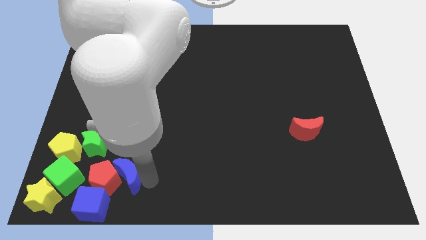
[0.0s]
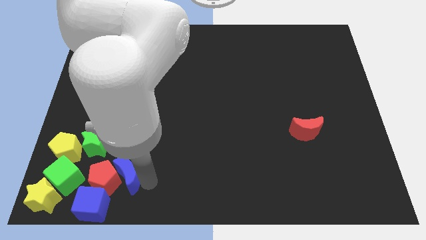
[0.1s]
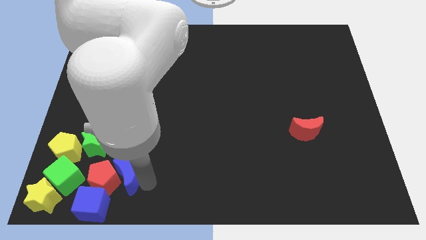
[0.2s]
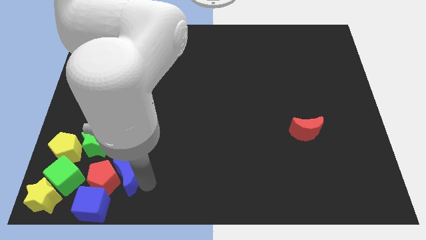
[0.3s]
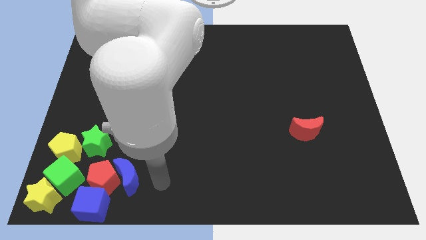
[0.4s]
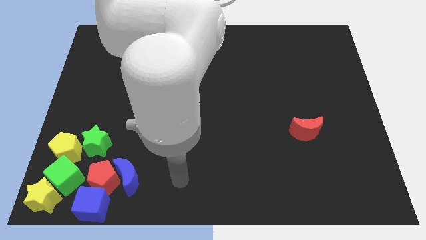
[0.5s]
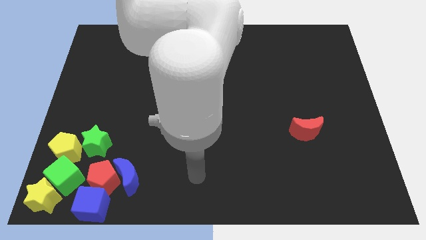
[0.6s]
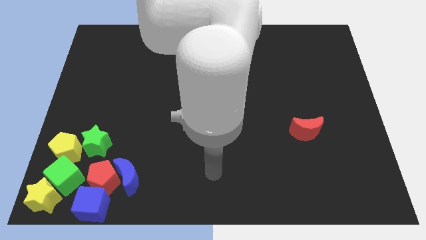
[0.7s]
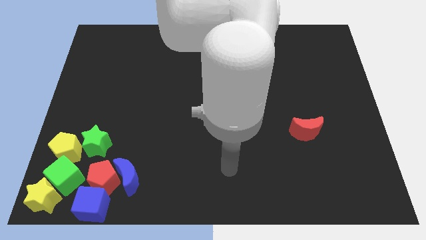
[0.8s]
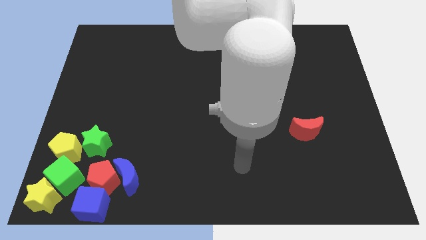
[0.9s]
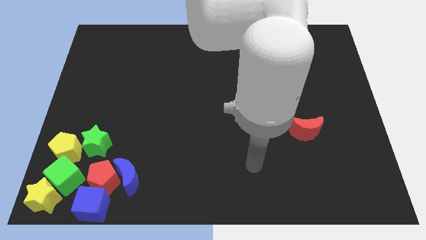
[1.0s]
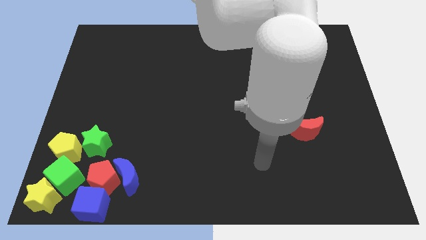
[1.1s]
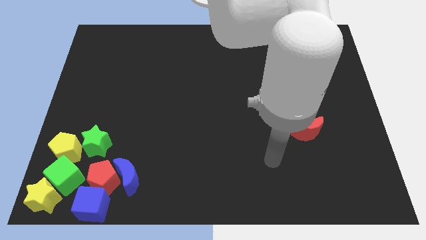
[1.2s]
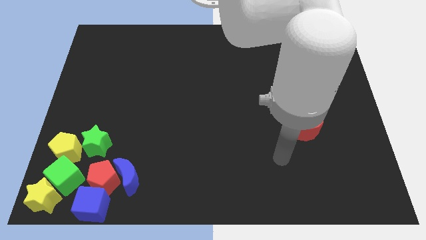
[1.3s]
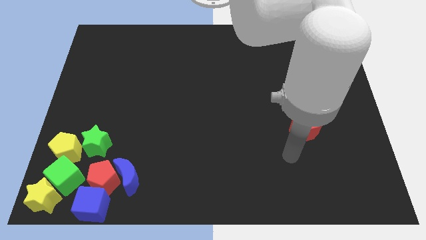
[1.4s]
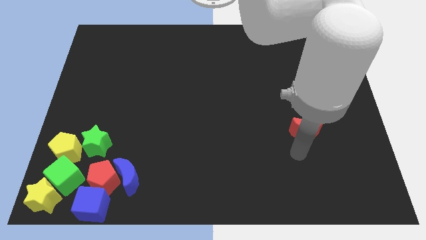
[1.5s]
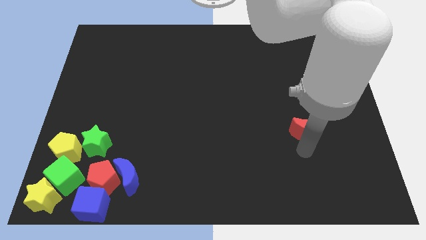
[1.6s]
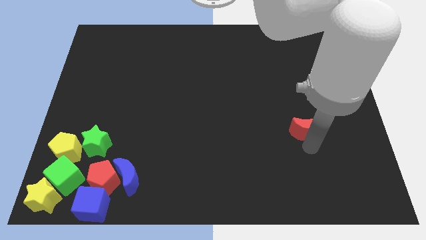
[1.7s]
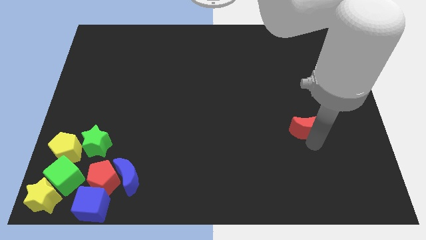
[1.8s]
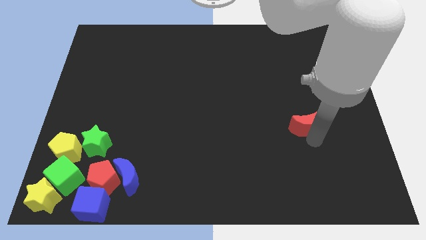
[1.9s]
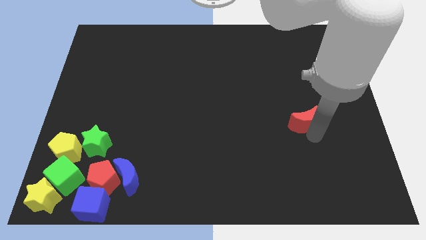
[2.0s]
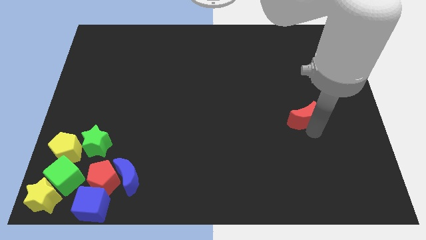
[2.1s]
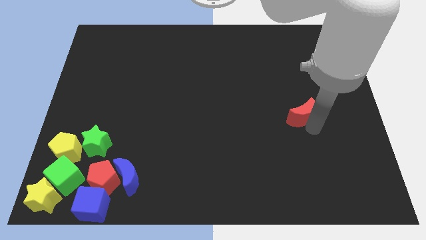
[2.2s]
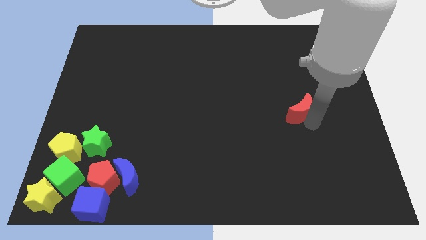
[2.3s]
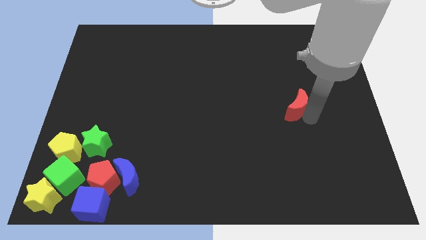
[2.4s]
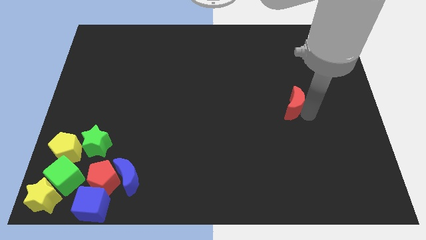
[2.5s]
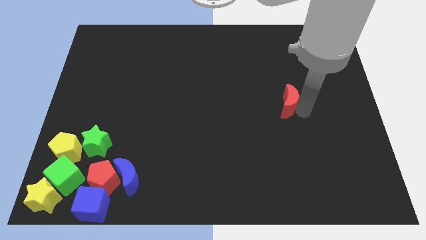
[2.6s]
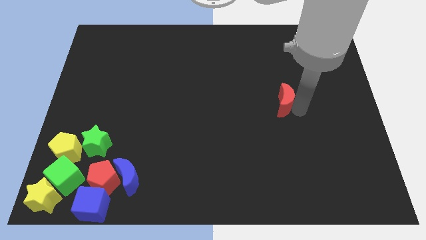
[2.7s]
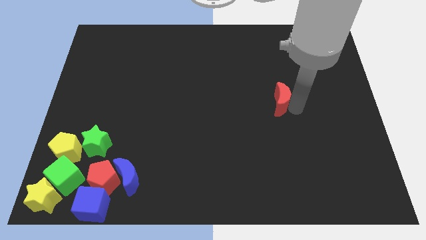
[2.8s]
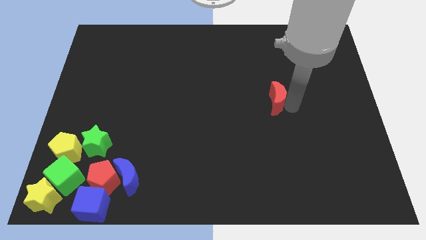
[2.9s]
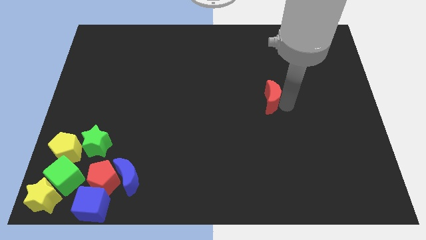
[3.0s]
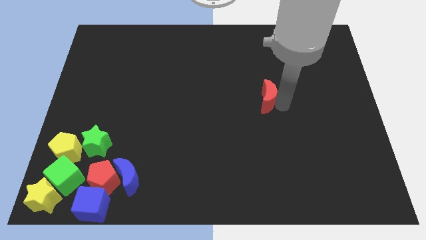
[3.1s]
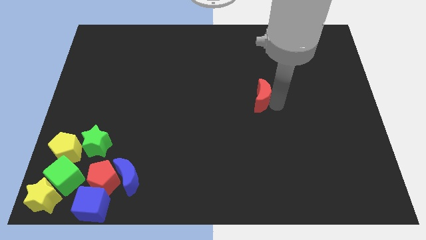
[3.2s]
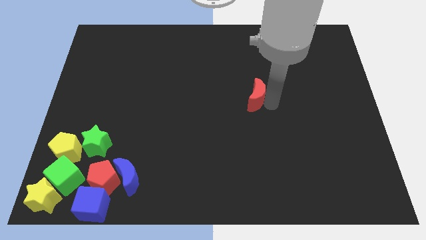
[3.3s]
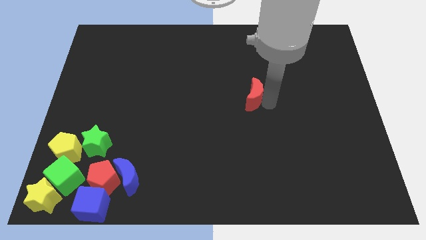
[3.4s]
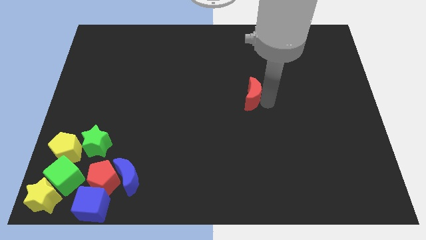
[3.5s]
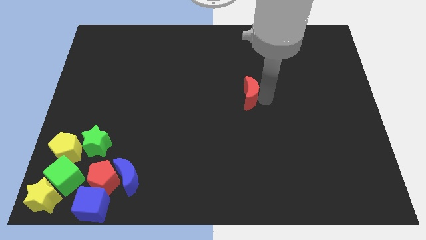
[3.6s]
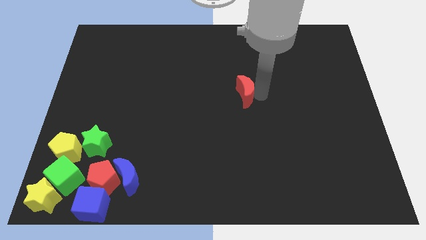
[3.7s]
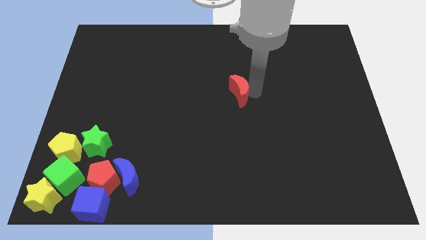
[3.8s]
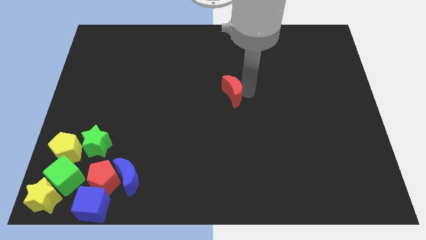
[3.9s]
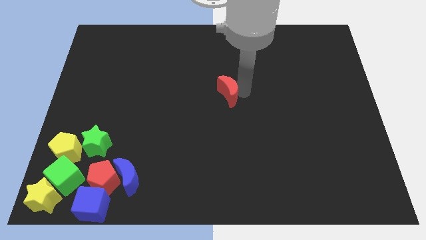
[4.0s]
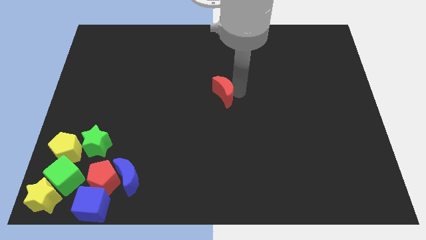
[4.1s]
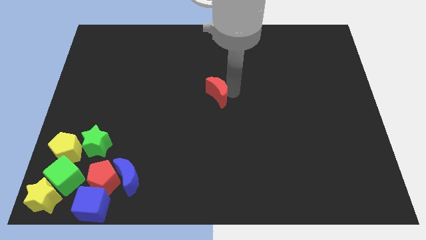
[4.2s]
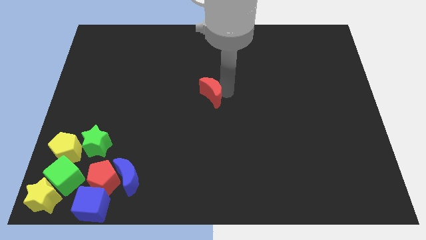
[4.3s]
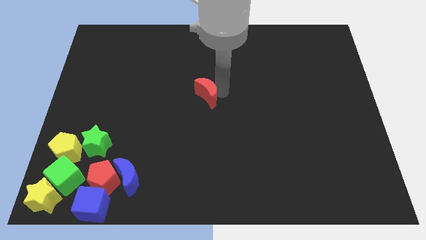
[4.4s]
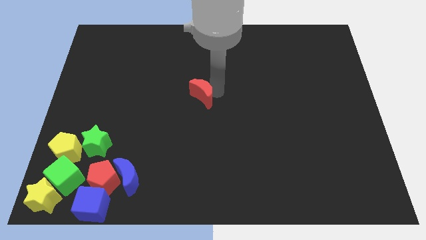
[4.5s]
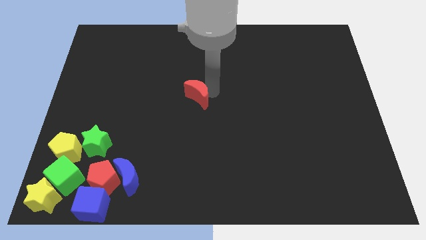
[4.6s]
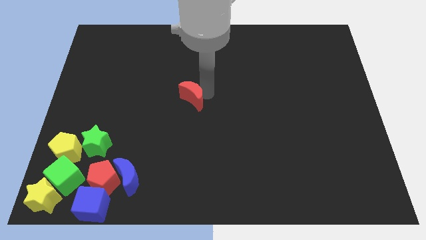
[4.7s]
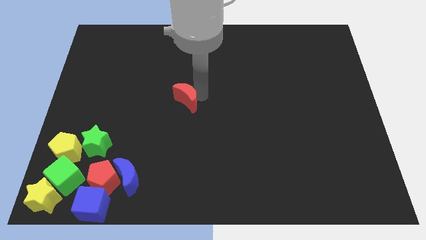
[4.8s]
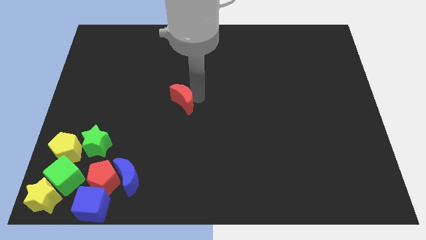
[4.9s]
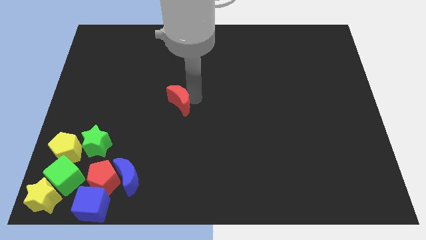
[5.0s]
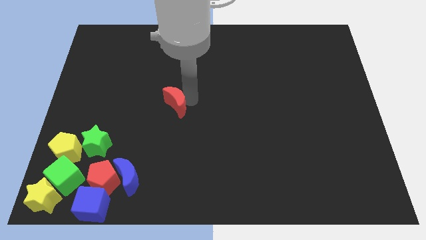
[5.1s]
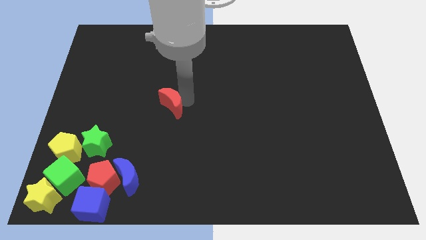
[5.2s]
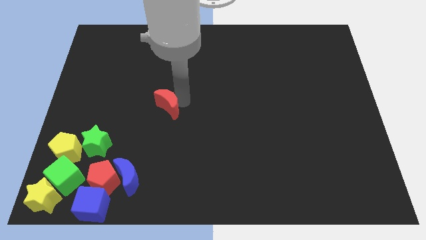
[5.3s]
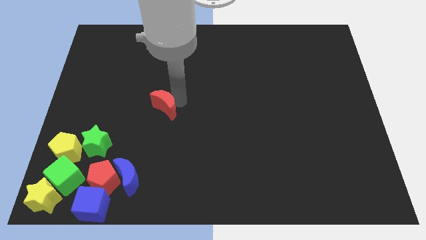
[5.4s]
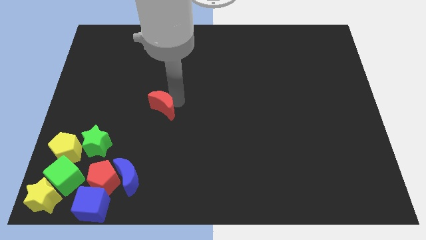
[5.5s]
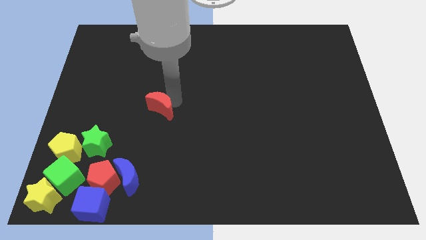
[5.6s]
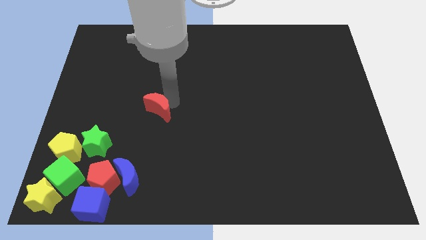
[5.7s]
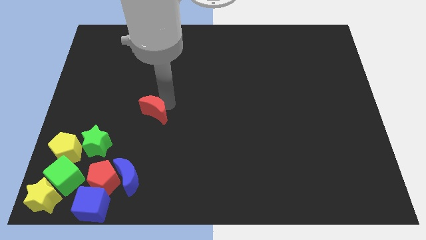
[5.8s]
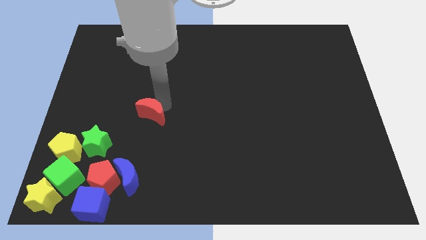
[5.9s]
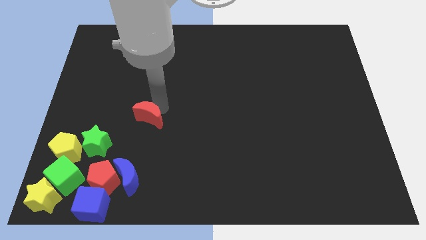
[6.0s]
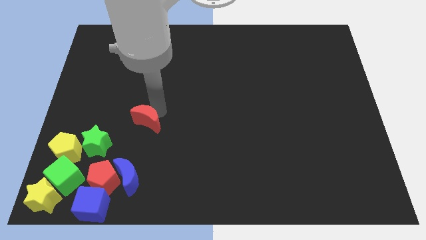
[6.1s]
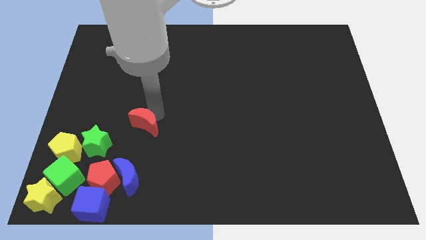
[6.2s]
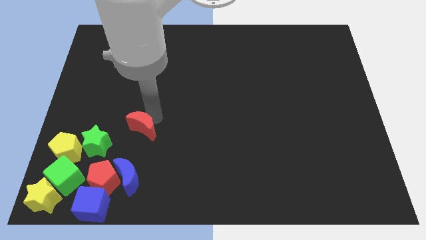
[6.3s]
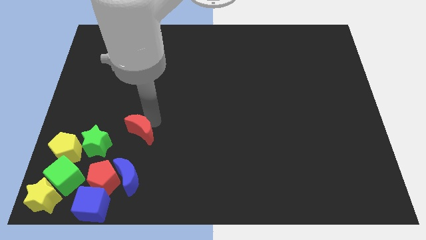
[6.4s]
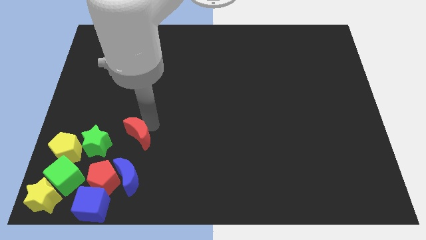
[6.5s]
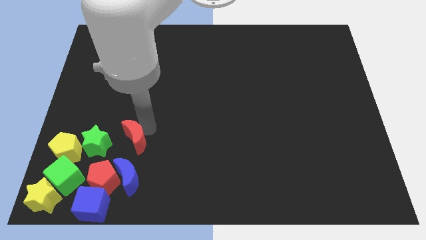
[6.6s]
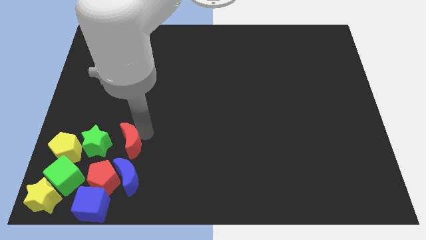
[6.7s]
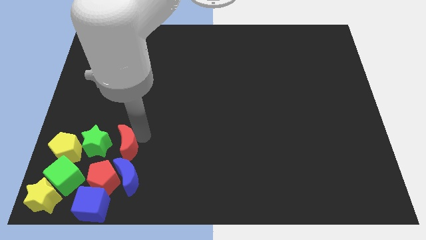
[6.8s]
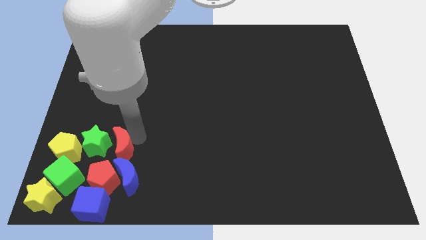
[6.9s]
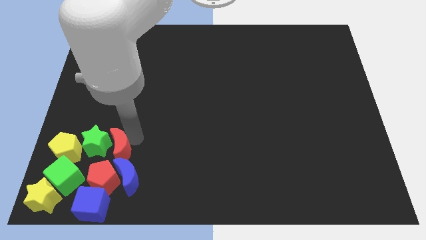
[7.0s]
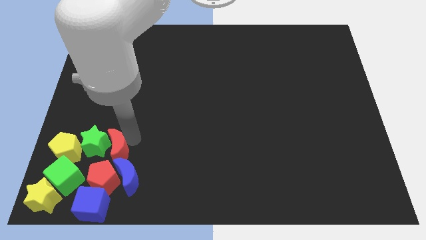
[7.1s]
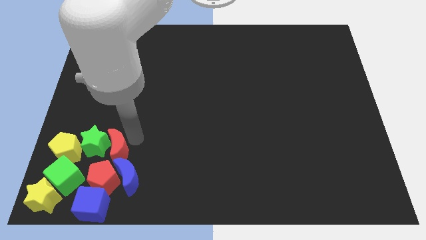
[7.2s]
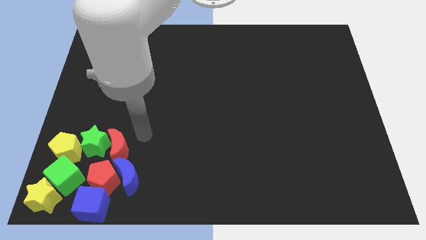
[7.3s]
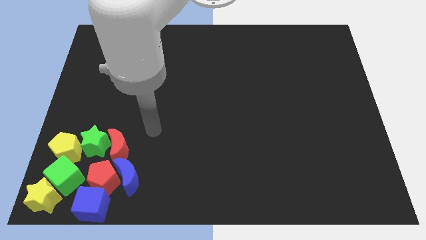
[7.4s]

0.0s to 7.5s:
drag the red moon to the right side of the green star

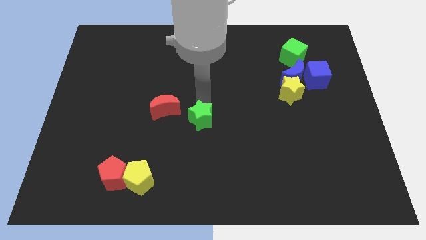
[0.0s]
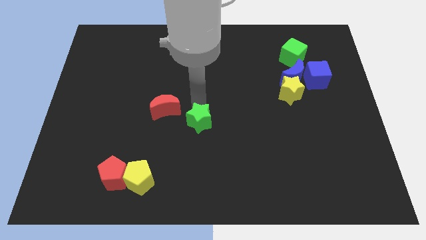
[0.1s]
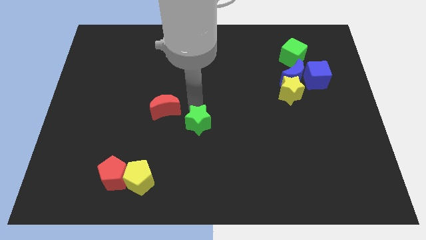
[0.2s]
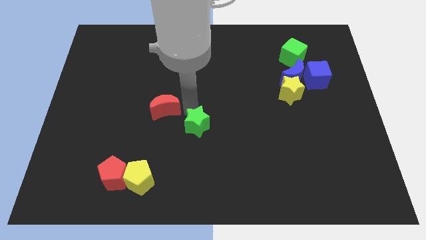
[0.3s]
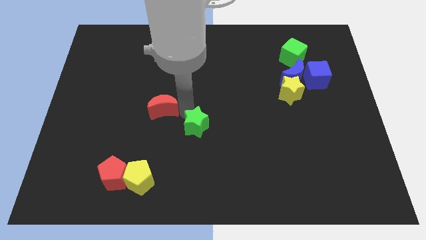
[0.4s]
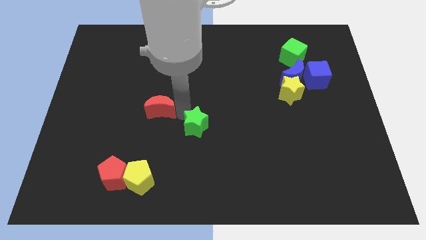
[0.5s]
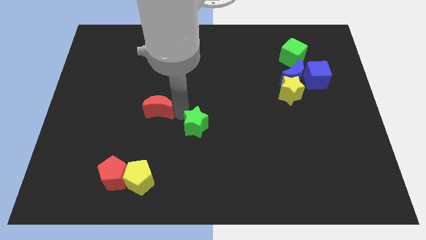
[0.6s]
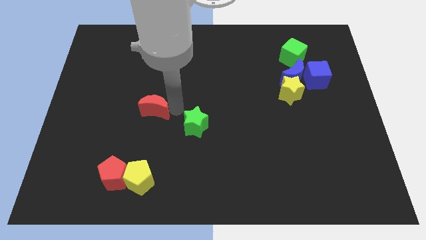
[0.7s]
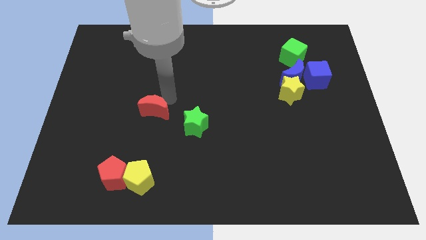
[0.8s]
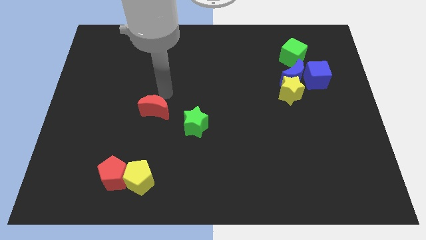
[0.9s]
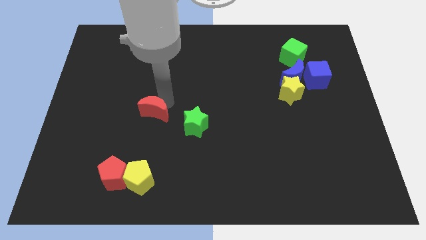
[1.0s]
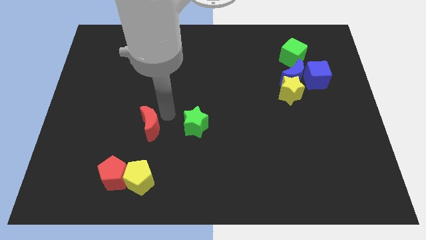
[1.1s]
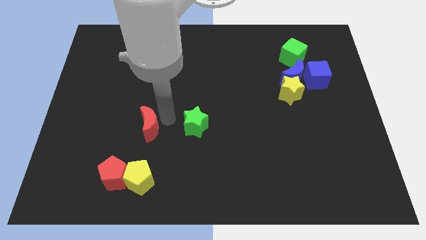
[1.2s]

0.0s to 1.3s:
push red moon downwards

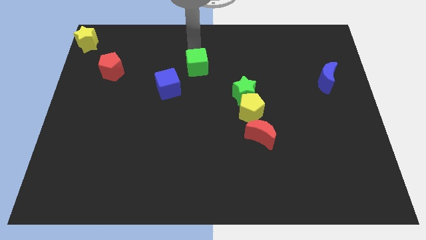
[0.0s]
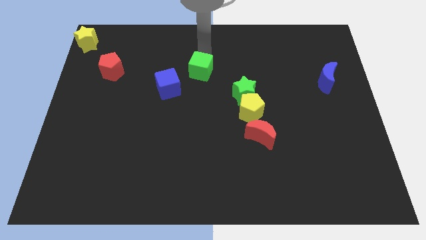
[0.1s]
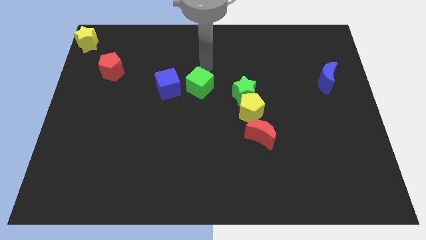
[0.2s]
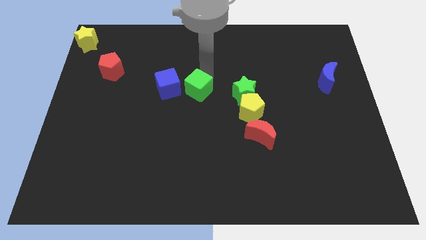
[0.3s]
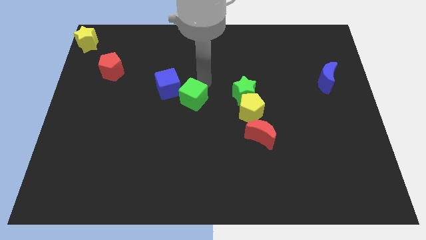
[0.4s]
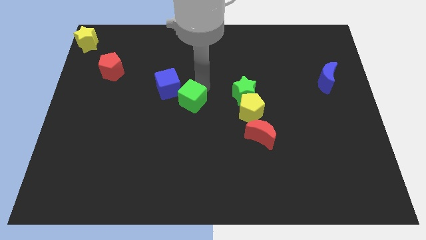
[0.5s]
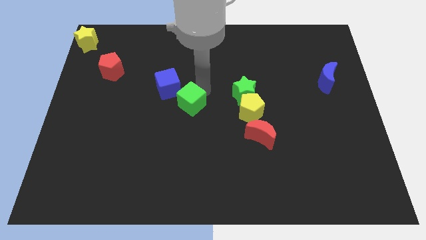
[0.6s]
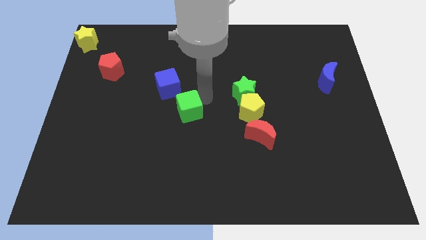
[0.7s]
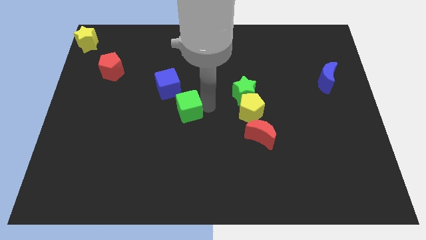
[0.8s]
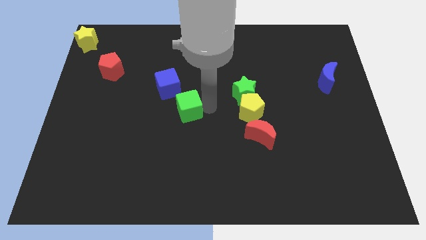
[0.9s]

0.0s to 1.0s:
move the green cube to the bottom right of the blue cube
